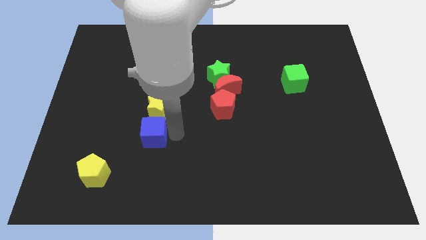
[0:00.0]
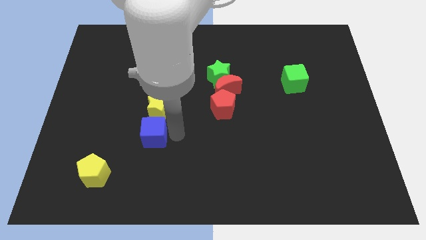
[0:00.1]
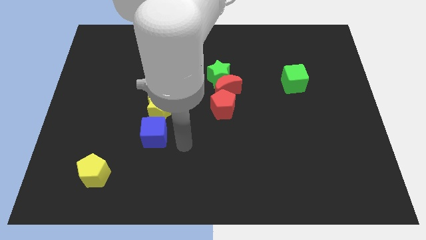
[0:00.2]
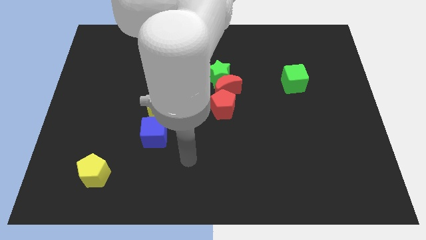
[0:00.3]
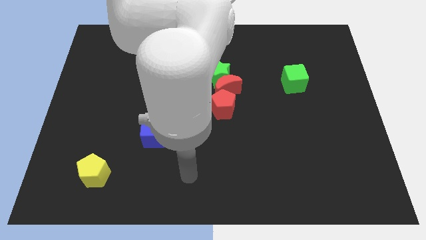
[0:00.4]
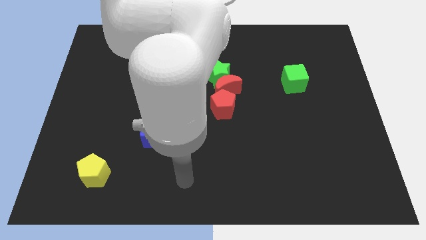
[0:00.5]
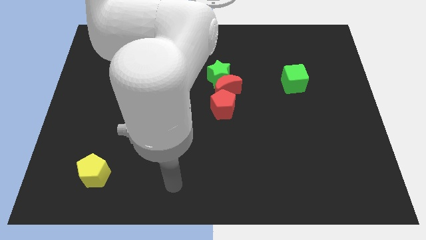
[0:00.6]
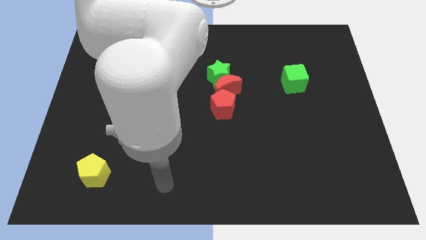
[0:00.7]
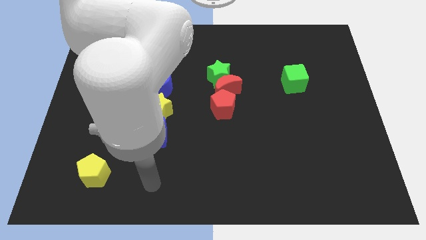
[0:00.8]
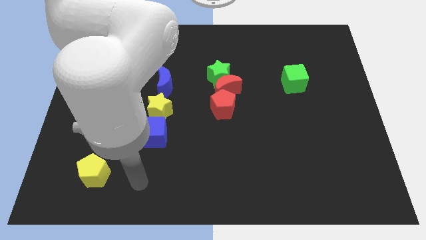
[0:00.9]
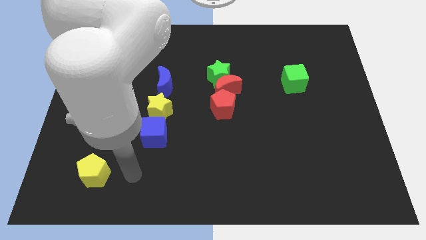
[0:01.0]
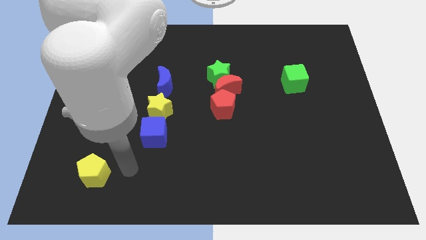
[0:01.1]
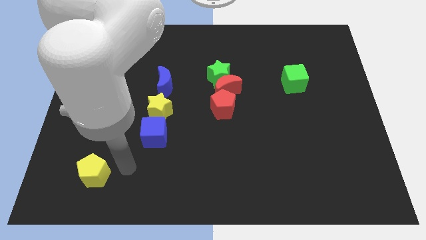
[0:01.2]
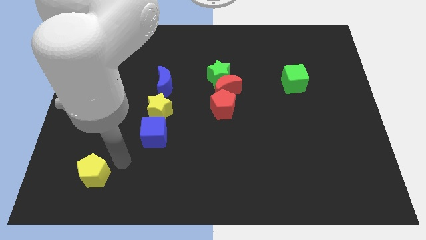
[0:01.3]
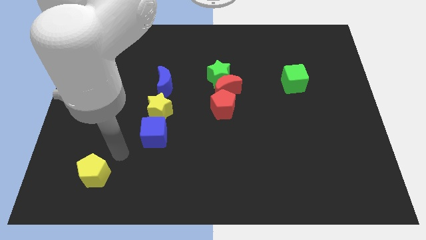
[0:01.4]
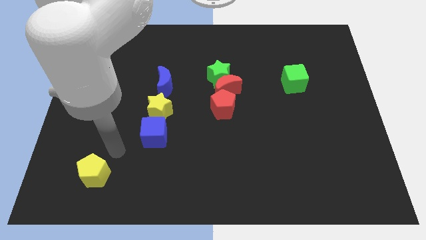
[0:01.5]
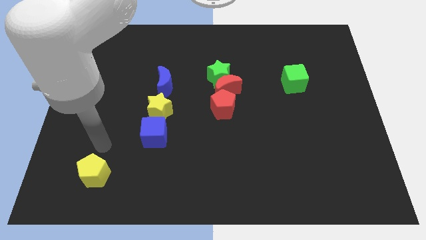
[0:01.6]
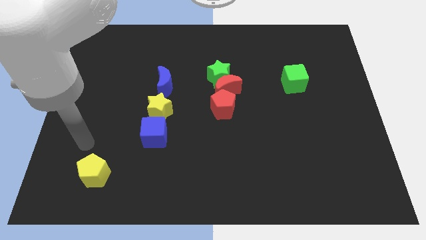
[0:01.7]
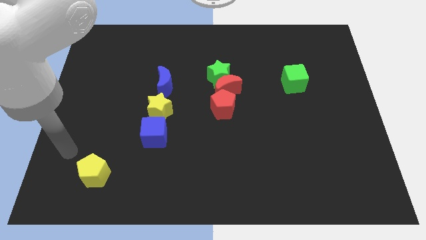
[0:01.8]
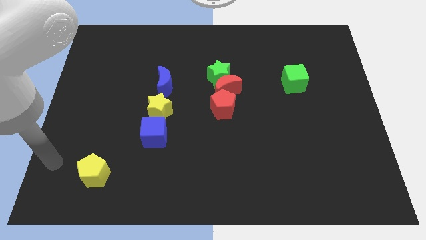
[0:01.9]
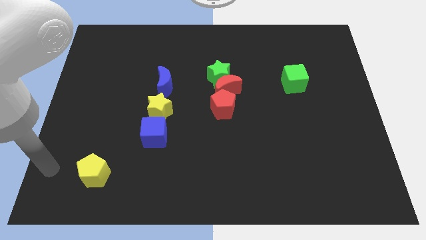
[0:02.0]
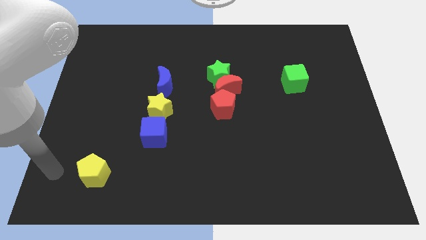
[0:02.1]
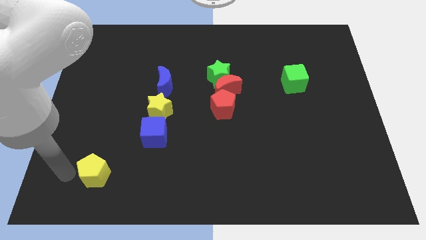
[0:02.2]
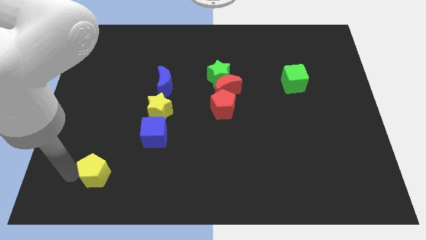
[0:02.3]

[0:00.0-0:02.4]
place your arm to the left of yellow pentagon

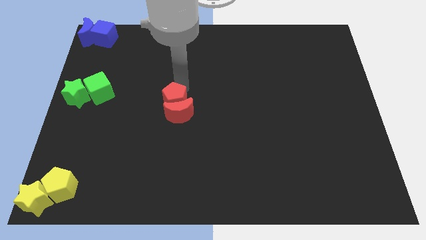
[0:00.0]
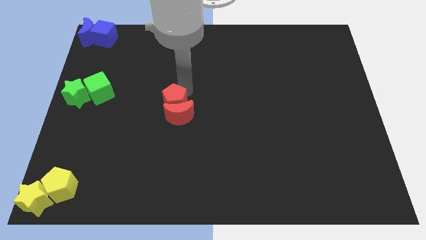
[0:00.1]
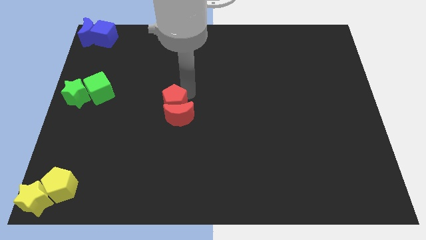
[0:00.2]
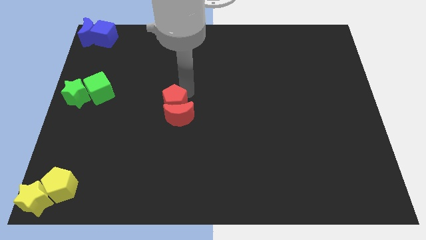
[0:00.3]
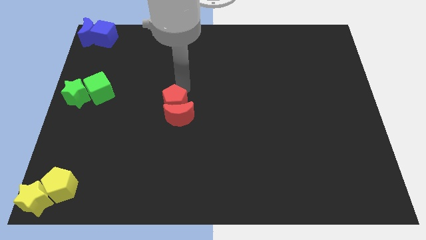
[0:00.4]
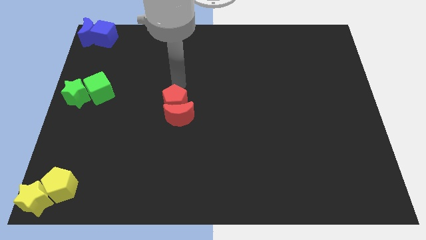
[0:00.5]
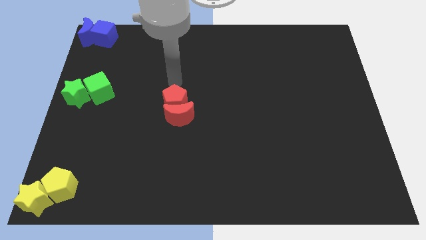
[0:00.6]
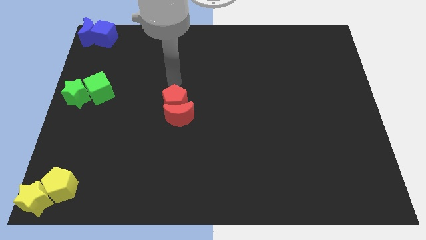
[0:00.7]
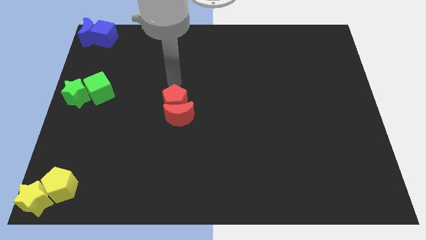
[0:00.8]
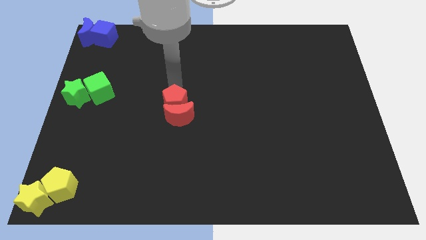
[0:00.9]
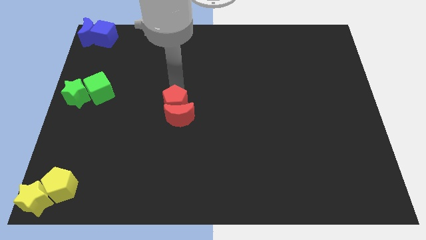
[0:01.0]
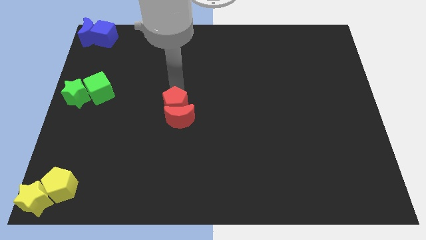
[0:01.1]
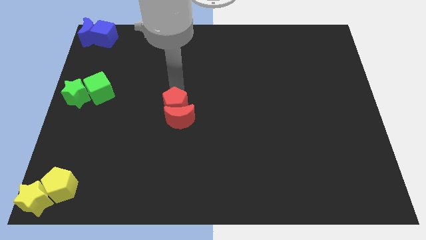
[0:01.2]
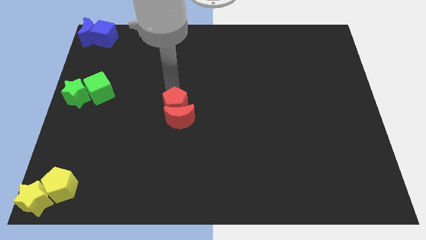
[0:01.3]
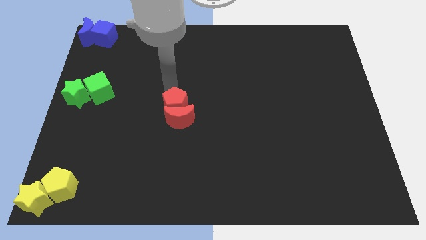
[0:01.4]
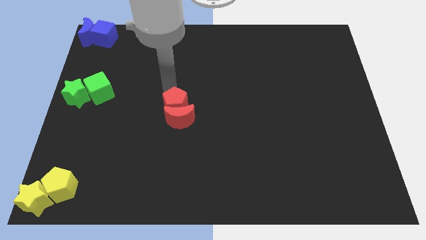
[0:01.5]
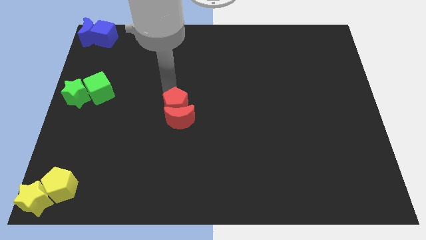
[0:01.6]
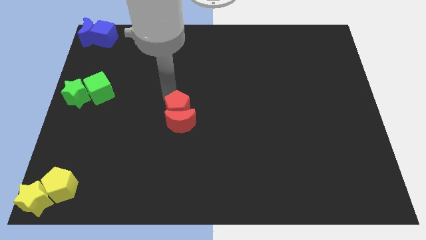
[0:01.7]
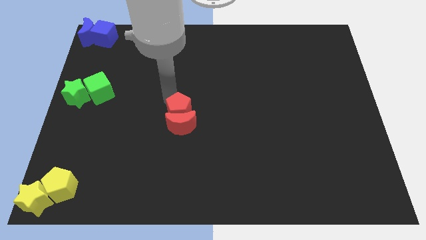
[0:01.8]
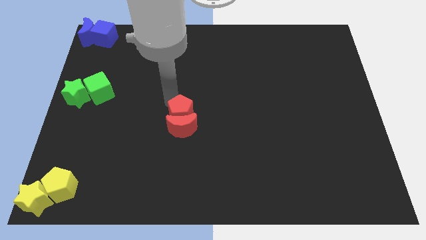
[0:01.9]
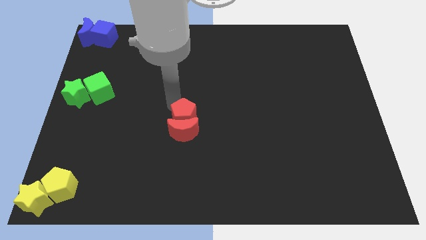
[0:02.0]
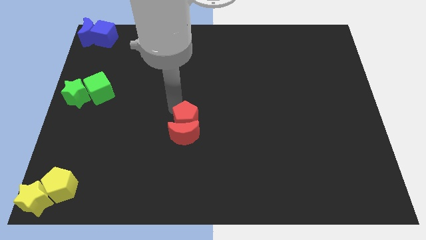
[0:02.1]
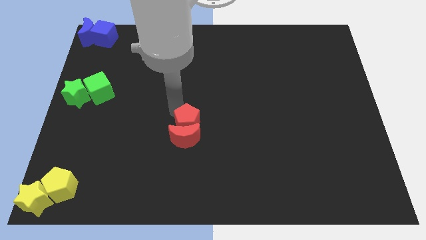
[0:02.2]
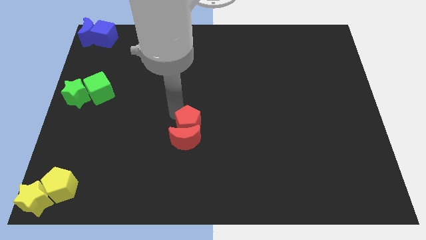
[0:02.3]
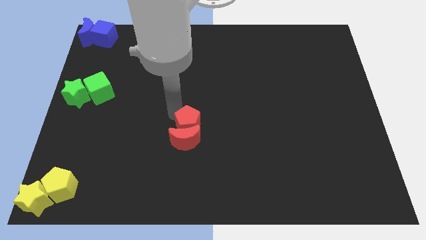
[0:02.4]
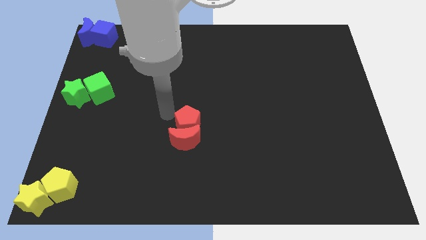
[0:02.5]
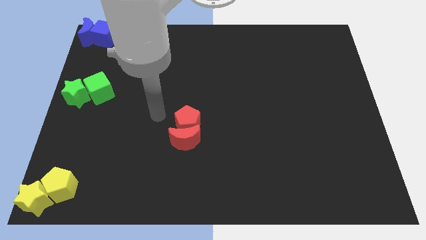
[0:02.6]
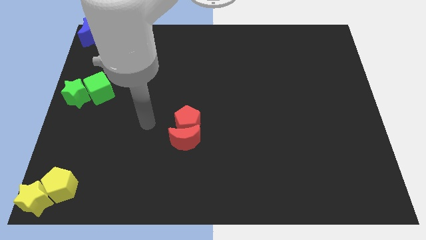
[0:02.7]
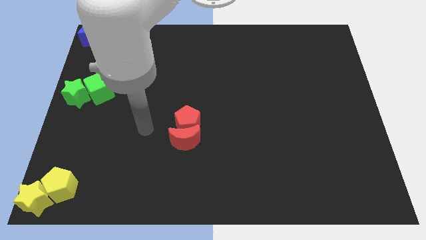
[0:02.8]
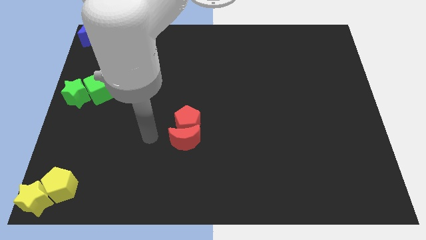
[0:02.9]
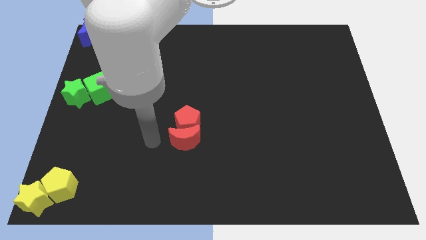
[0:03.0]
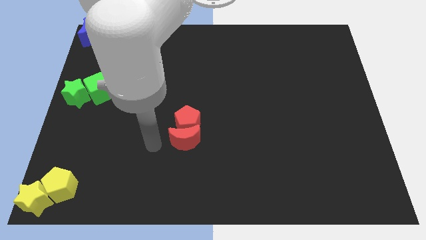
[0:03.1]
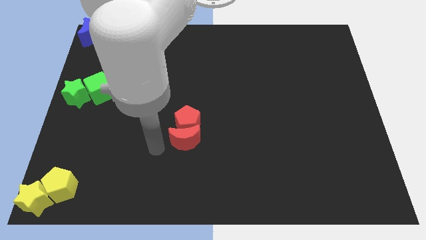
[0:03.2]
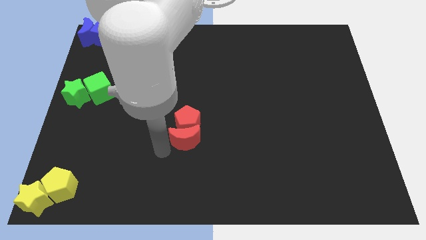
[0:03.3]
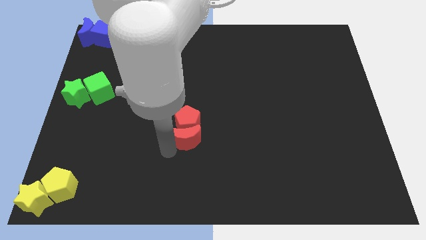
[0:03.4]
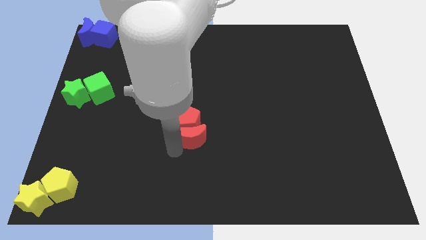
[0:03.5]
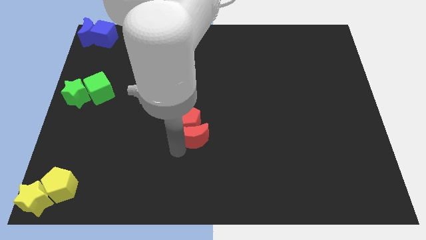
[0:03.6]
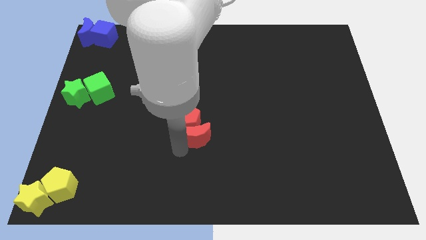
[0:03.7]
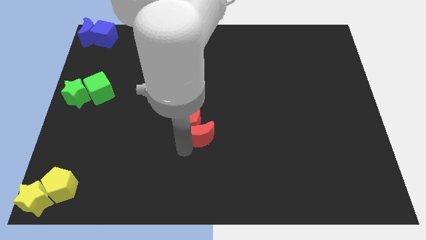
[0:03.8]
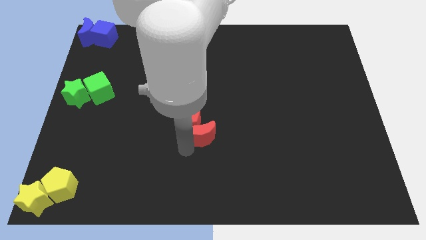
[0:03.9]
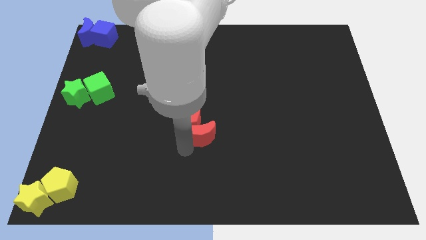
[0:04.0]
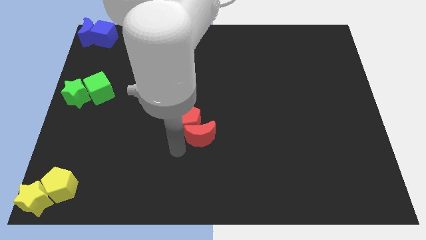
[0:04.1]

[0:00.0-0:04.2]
push the red blocks towards the bottom side of the board

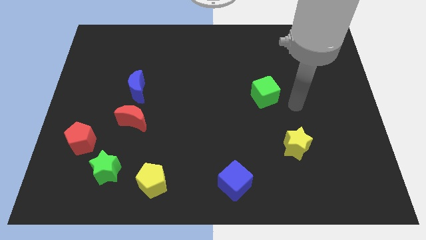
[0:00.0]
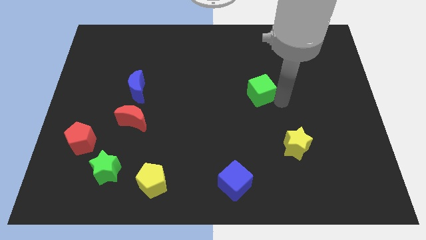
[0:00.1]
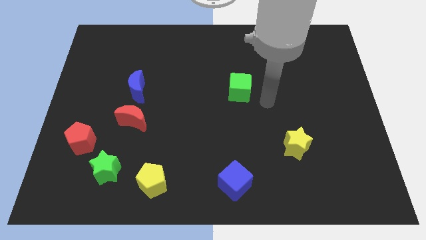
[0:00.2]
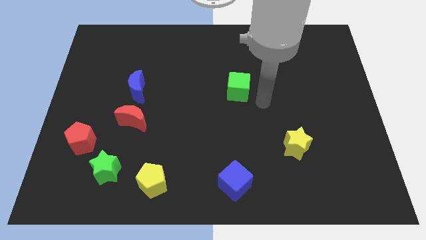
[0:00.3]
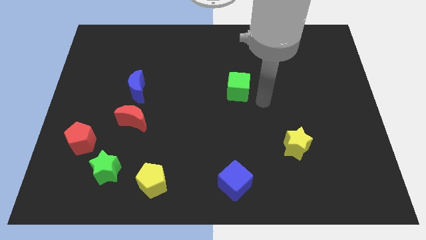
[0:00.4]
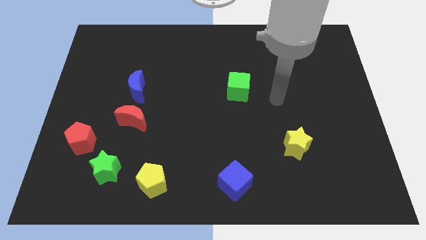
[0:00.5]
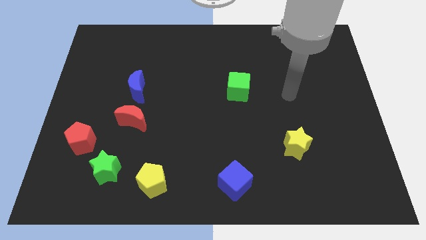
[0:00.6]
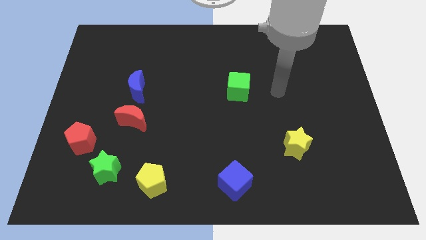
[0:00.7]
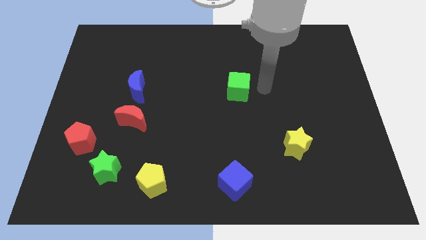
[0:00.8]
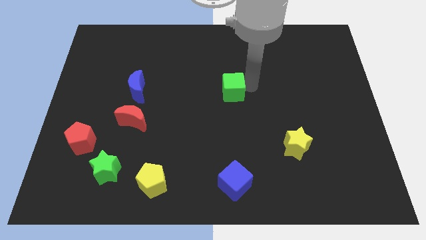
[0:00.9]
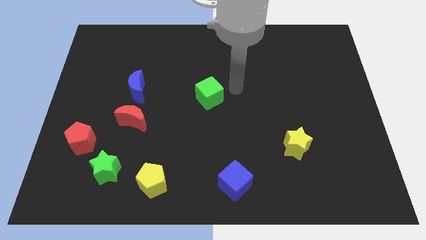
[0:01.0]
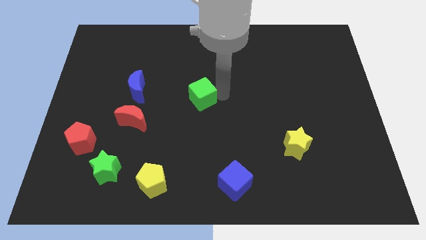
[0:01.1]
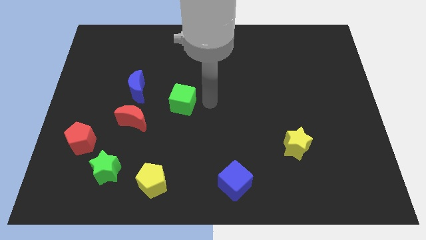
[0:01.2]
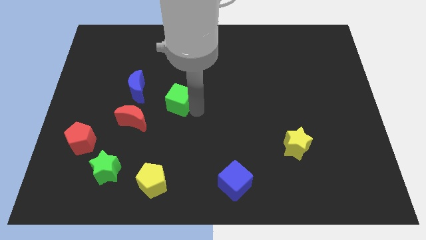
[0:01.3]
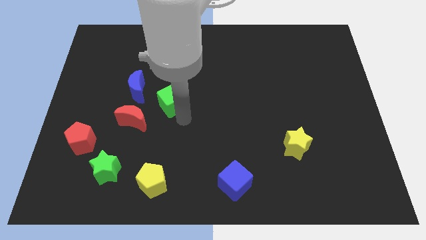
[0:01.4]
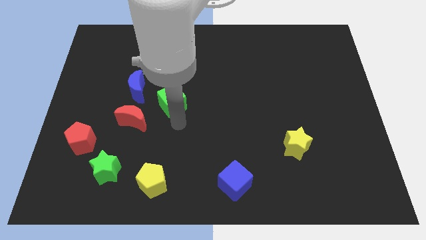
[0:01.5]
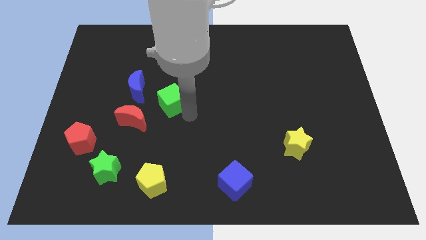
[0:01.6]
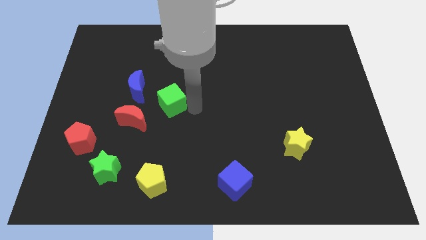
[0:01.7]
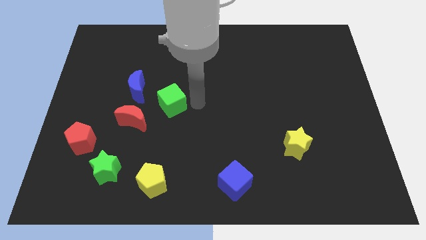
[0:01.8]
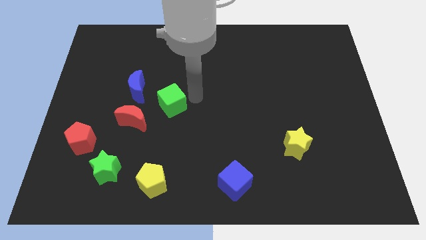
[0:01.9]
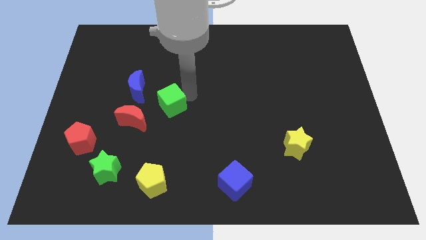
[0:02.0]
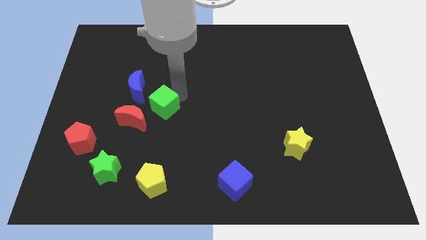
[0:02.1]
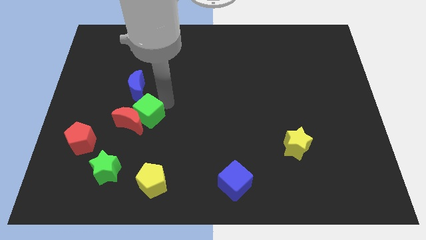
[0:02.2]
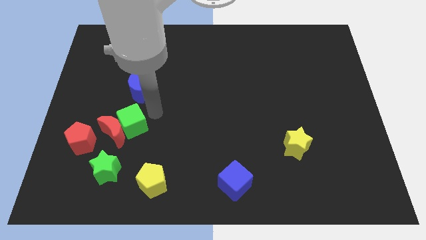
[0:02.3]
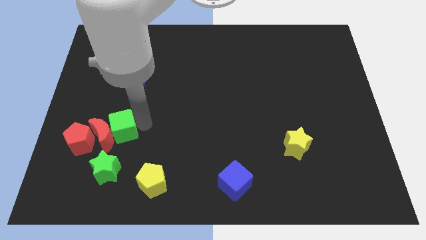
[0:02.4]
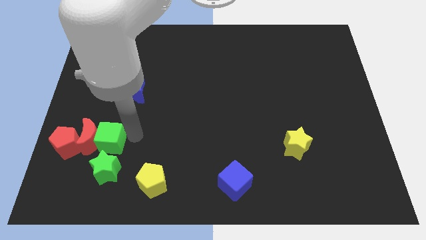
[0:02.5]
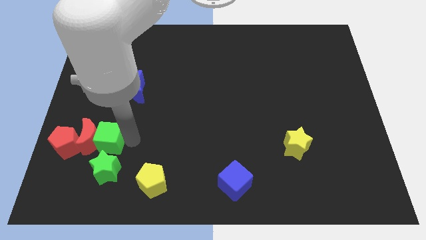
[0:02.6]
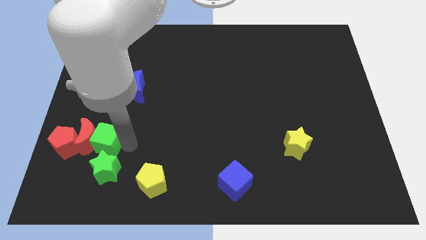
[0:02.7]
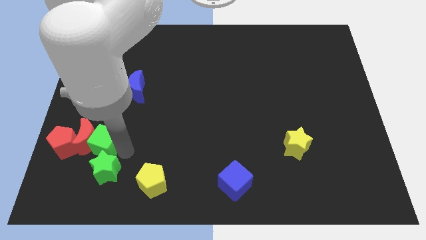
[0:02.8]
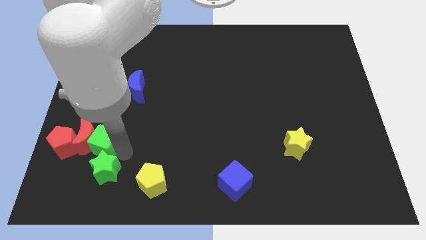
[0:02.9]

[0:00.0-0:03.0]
place green cube to the top of green star
